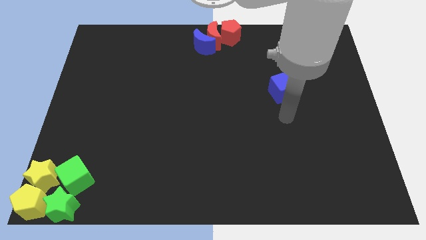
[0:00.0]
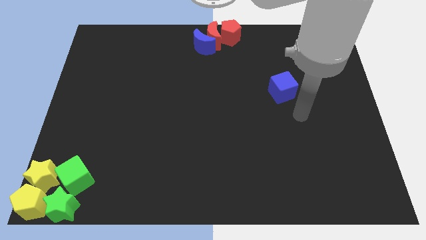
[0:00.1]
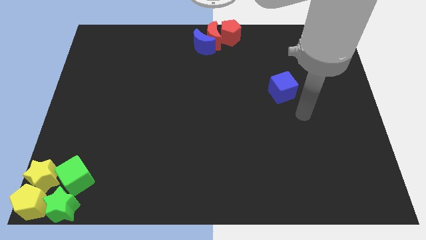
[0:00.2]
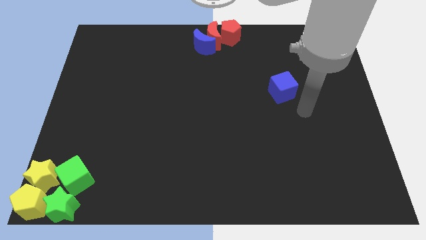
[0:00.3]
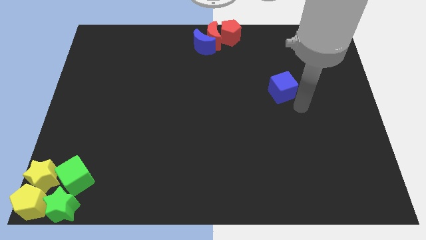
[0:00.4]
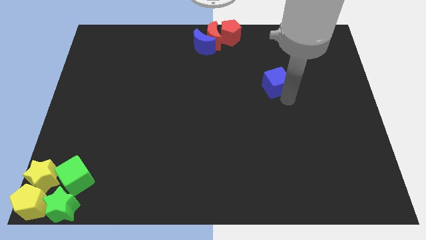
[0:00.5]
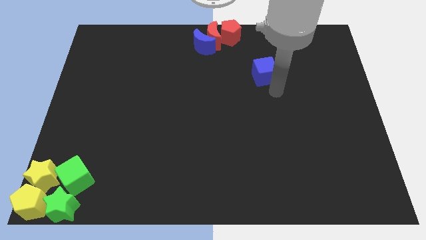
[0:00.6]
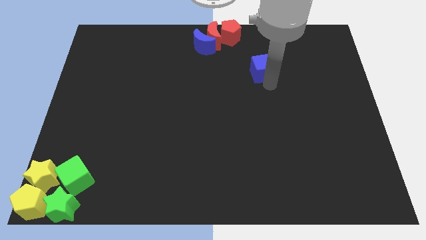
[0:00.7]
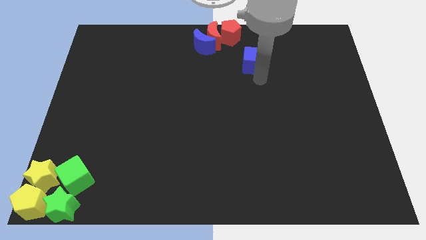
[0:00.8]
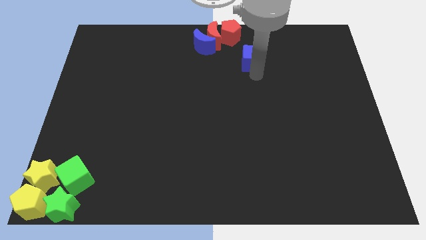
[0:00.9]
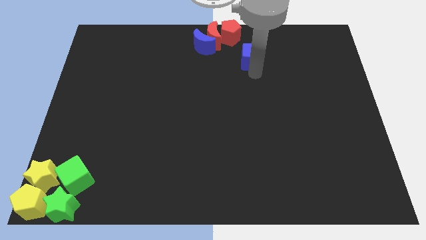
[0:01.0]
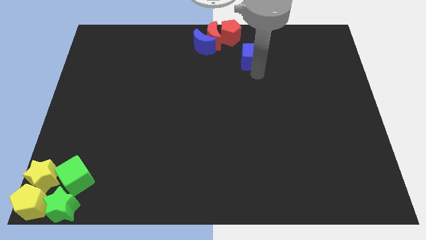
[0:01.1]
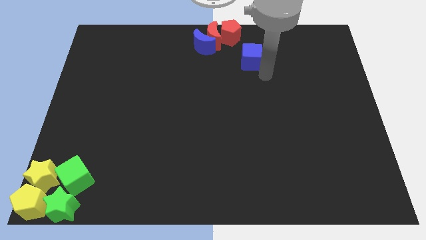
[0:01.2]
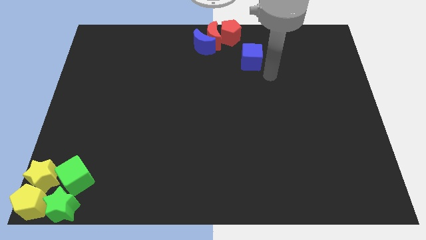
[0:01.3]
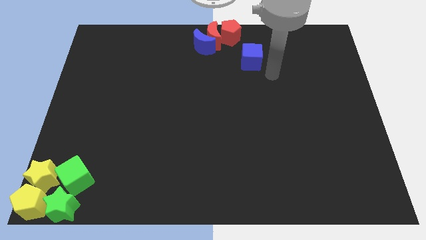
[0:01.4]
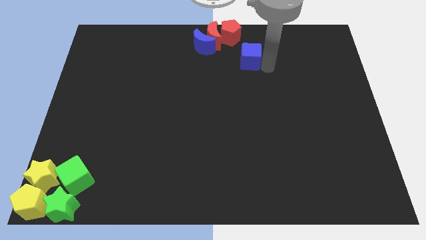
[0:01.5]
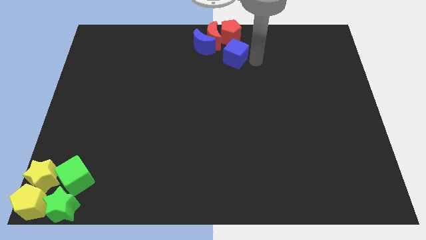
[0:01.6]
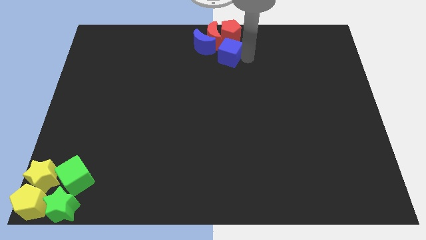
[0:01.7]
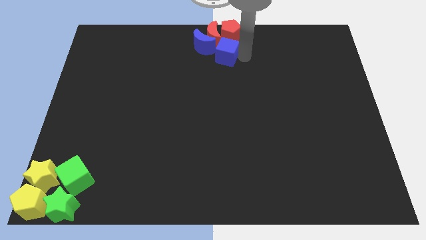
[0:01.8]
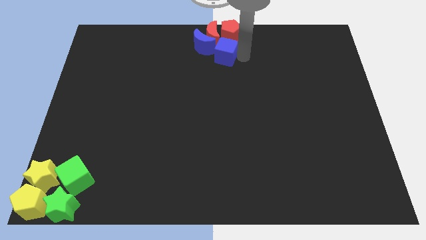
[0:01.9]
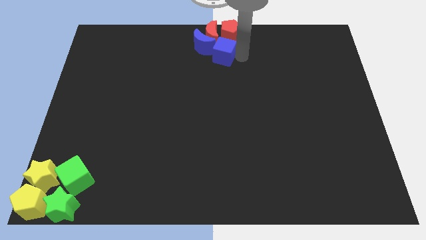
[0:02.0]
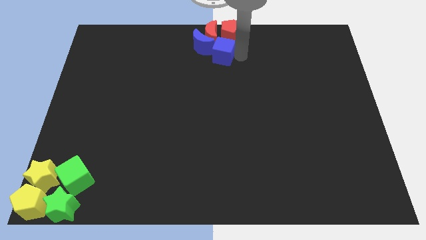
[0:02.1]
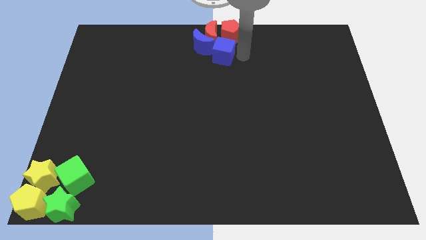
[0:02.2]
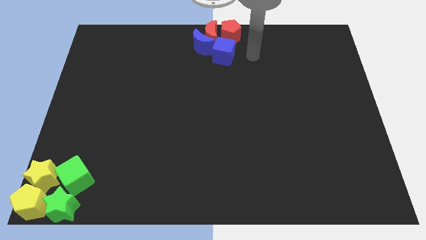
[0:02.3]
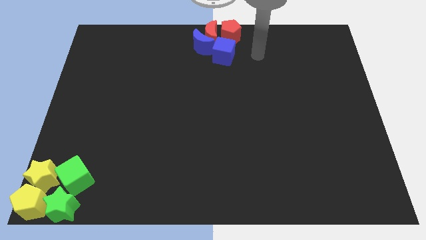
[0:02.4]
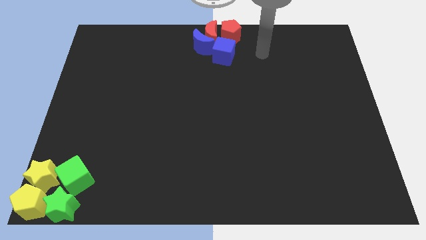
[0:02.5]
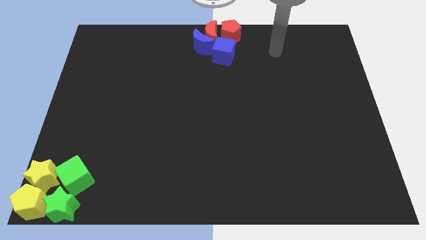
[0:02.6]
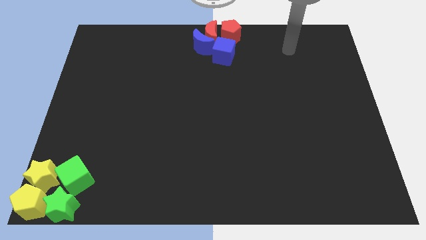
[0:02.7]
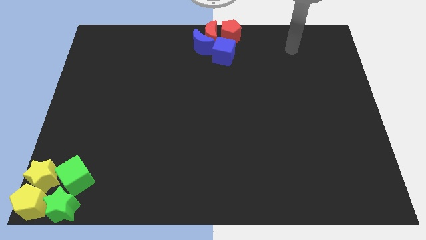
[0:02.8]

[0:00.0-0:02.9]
push the blue cube below the red pentagon

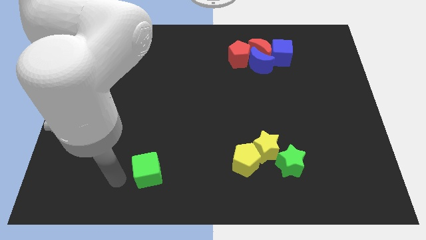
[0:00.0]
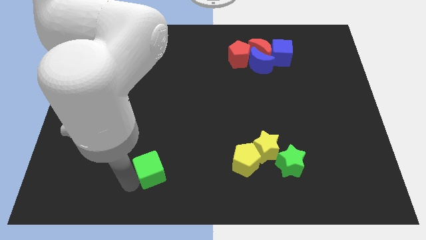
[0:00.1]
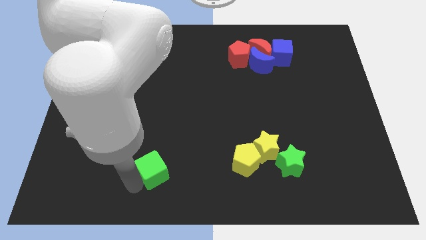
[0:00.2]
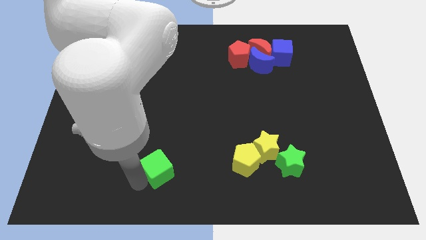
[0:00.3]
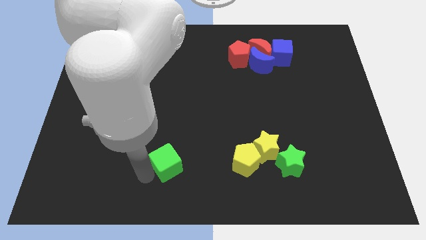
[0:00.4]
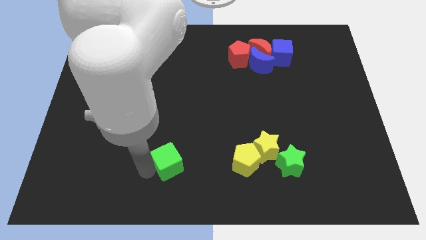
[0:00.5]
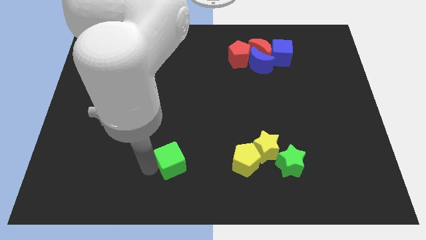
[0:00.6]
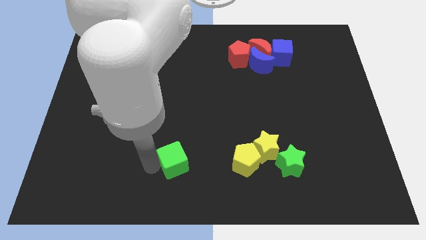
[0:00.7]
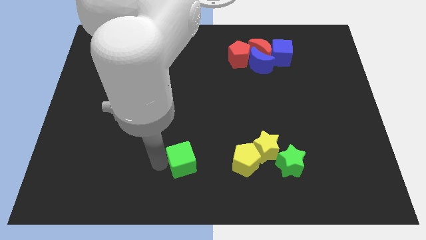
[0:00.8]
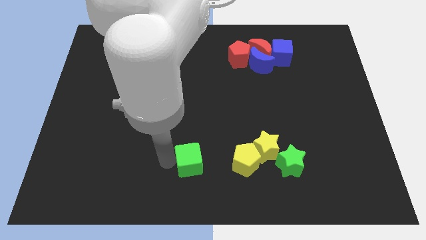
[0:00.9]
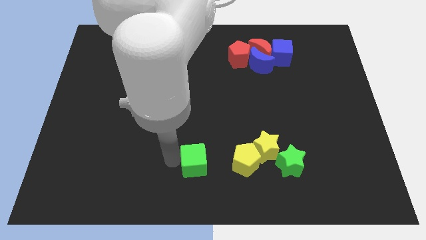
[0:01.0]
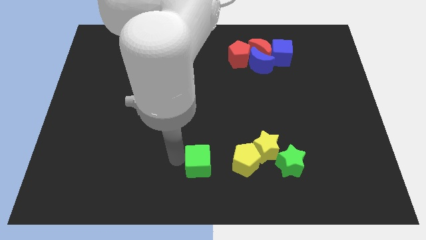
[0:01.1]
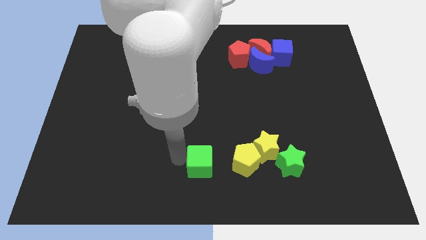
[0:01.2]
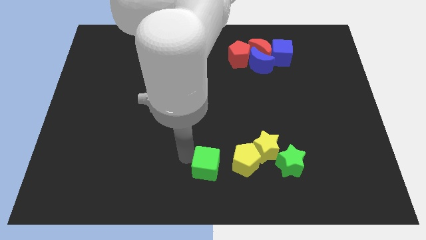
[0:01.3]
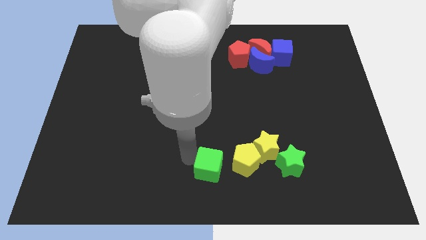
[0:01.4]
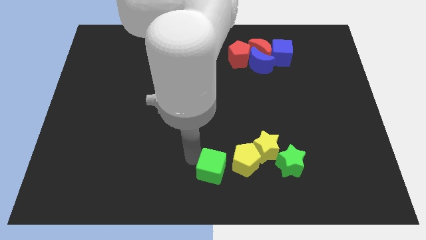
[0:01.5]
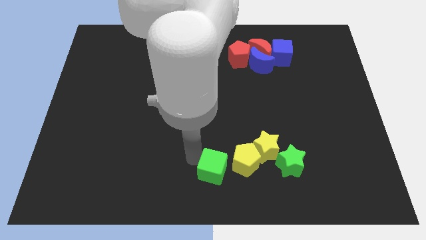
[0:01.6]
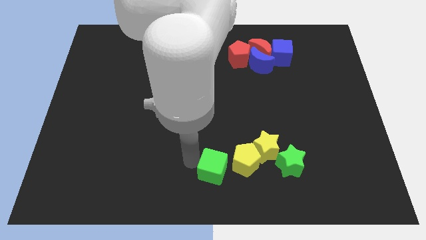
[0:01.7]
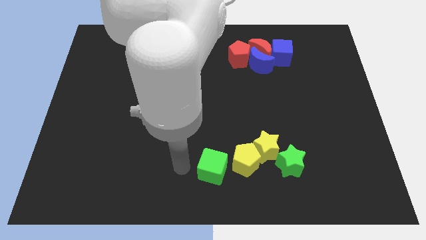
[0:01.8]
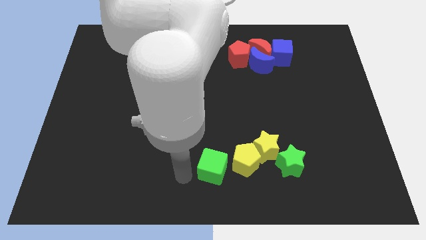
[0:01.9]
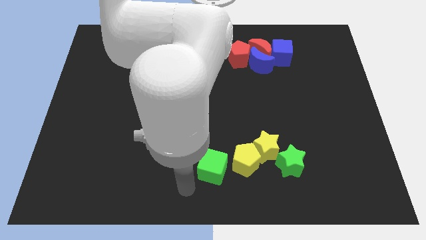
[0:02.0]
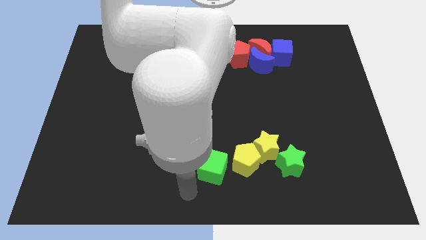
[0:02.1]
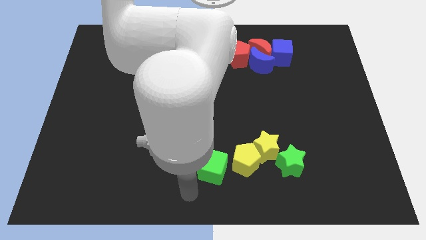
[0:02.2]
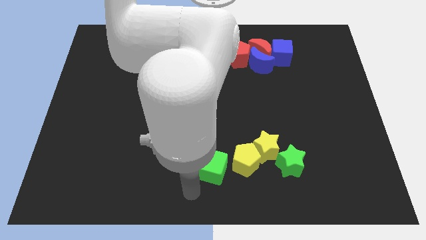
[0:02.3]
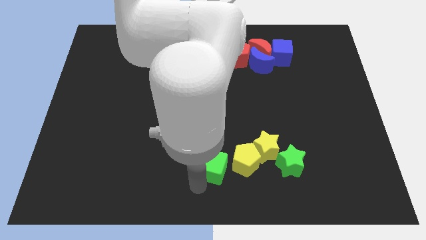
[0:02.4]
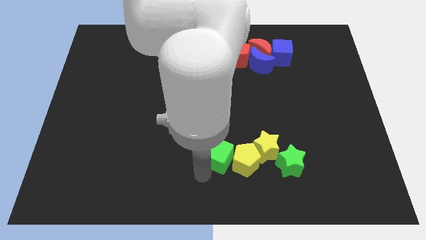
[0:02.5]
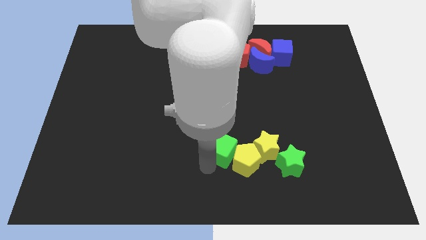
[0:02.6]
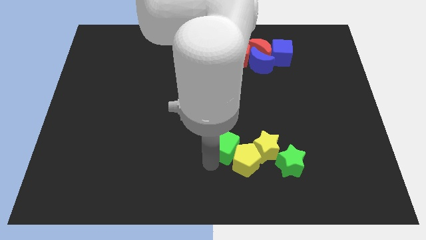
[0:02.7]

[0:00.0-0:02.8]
move the green cube left to the yellow pentagon

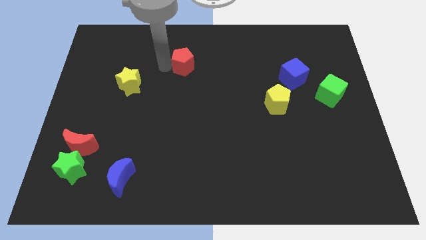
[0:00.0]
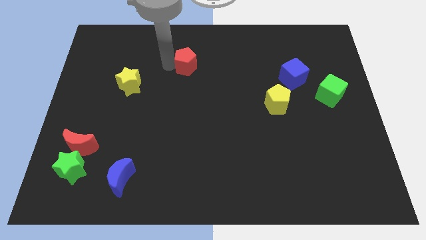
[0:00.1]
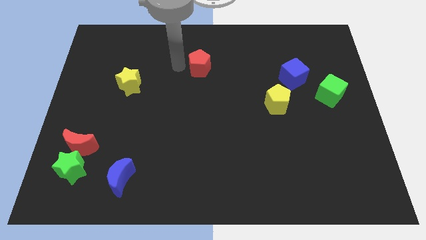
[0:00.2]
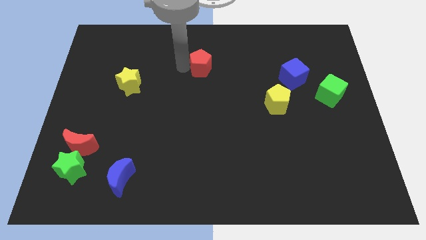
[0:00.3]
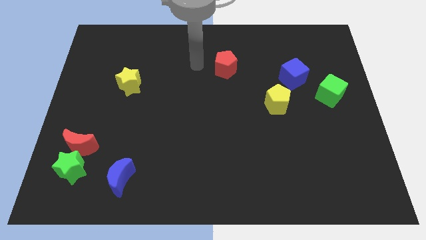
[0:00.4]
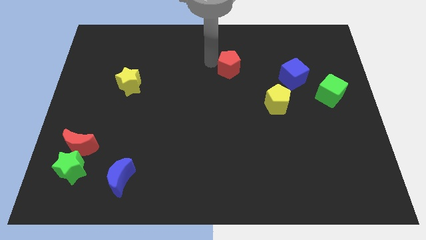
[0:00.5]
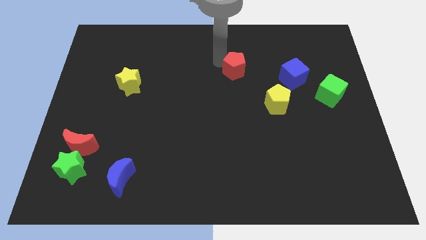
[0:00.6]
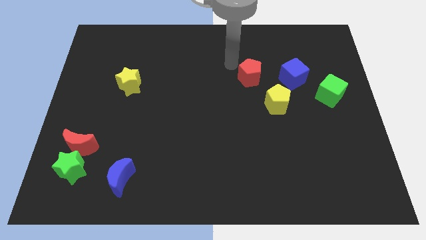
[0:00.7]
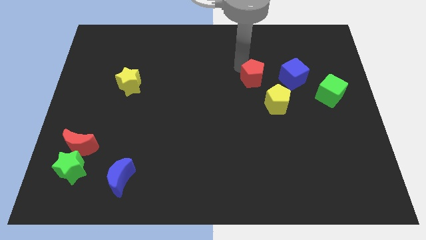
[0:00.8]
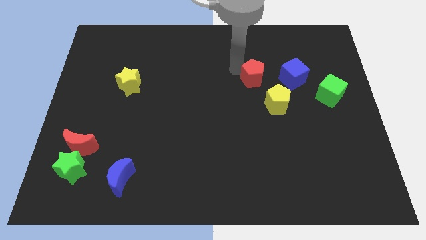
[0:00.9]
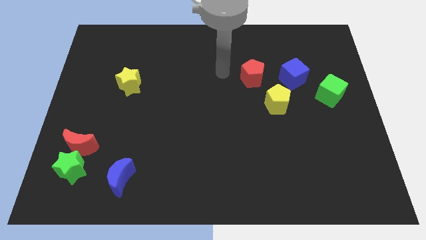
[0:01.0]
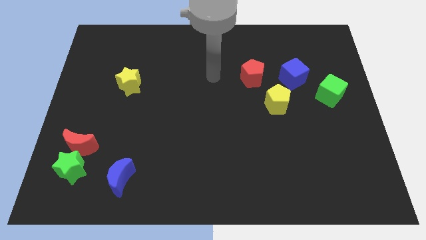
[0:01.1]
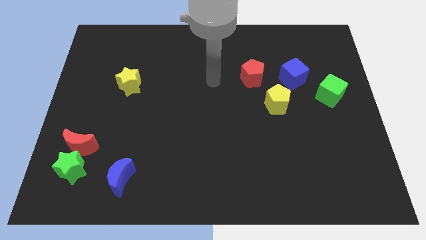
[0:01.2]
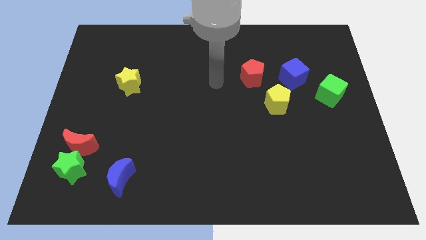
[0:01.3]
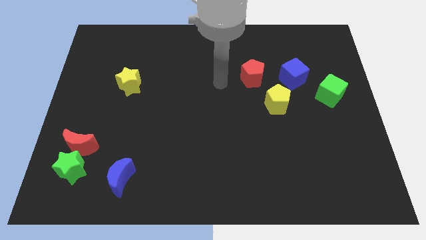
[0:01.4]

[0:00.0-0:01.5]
slide red pentagon towards the right of the board

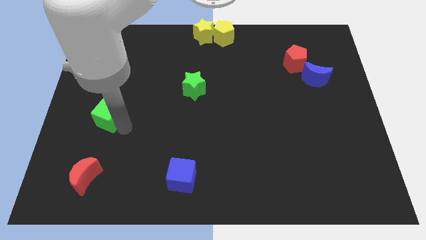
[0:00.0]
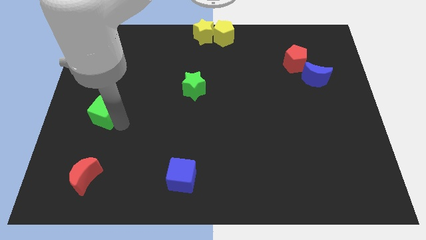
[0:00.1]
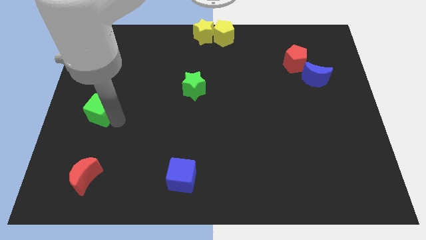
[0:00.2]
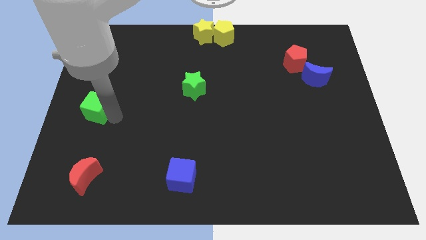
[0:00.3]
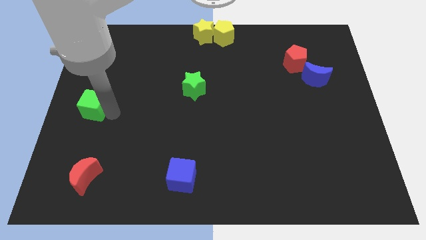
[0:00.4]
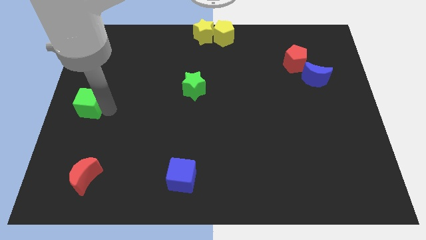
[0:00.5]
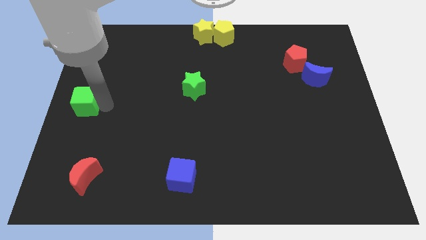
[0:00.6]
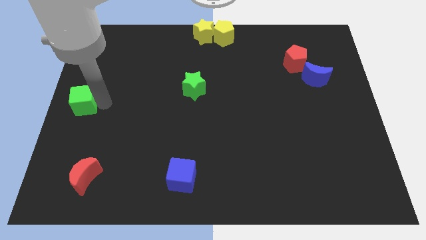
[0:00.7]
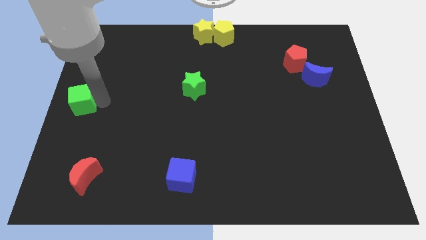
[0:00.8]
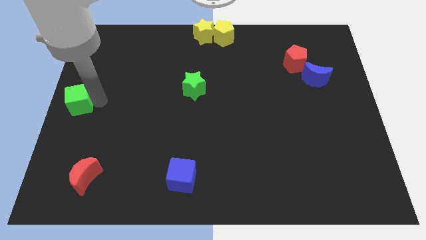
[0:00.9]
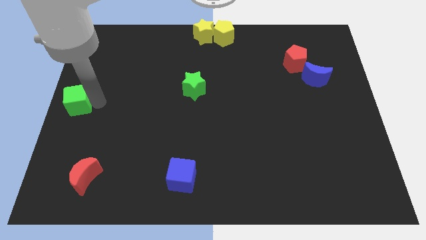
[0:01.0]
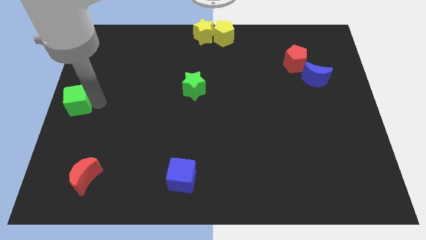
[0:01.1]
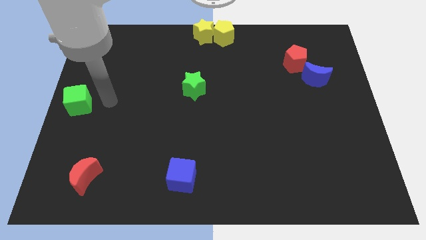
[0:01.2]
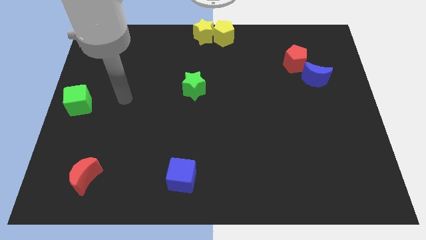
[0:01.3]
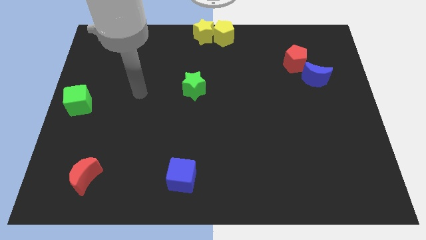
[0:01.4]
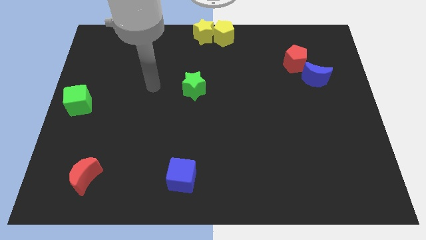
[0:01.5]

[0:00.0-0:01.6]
move the green cube to the left center of the board
